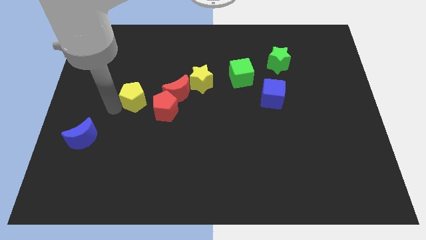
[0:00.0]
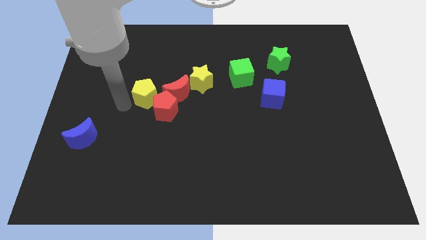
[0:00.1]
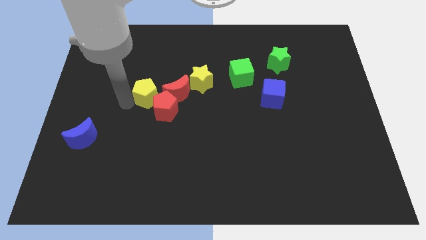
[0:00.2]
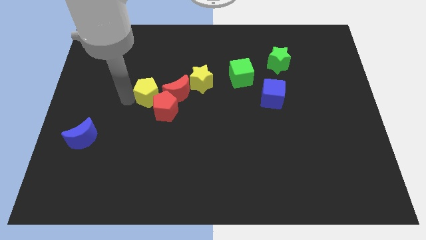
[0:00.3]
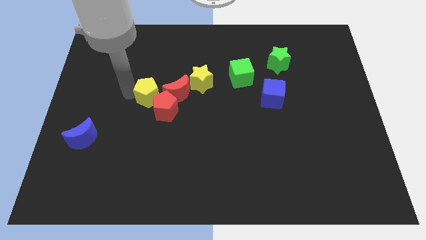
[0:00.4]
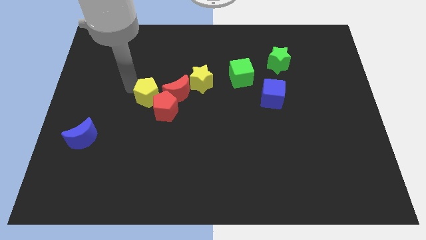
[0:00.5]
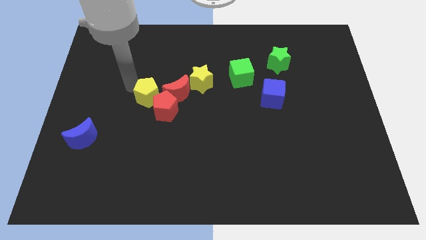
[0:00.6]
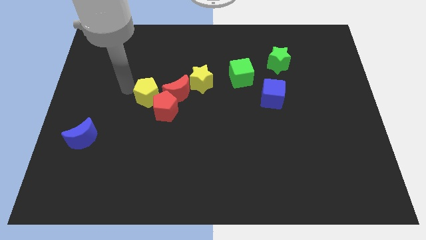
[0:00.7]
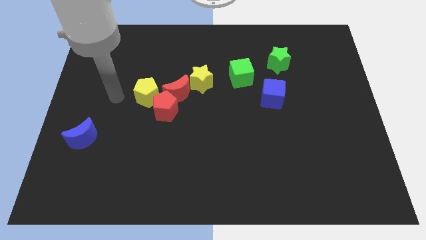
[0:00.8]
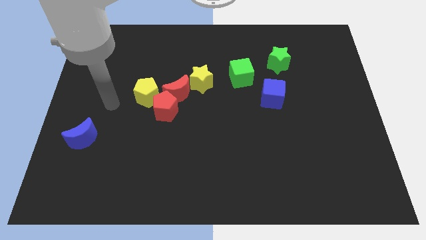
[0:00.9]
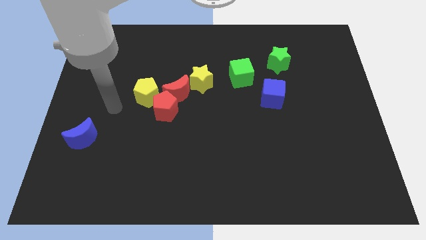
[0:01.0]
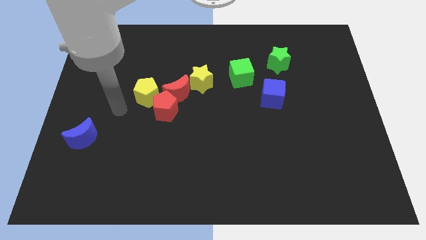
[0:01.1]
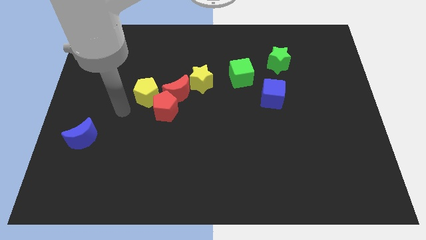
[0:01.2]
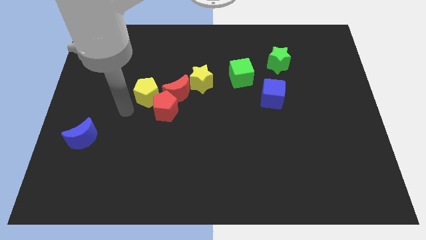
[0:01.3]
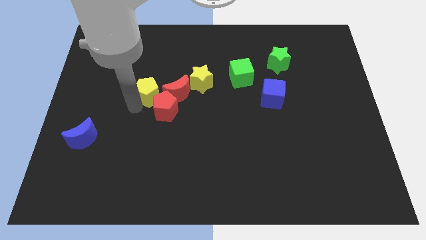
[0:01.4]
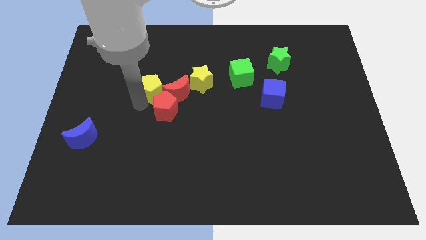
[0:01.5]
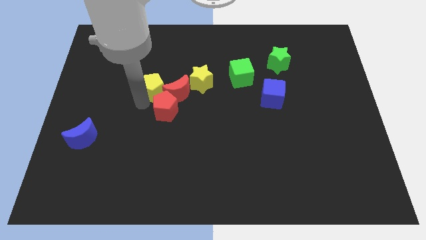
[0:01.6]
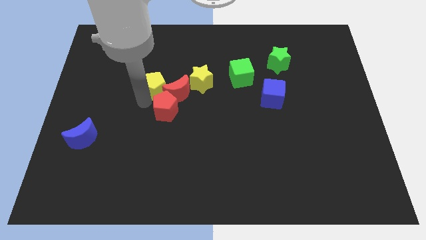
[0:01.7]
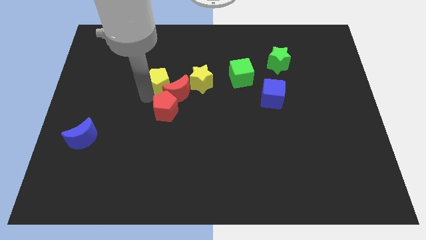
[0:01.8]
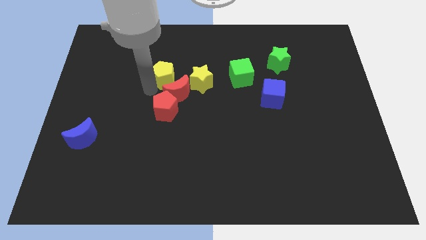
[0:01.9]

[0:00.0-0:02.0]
disturb yellow pentagon

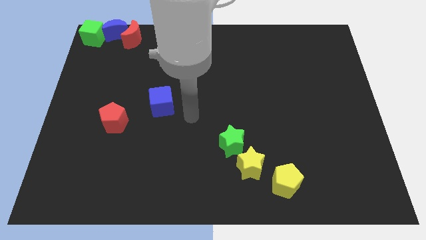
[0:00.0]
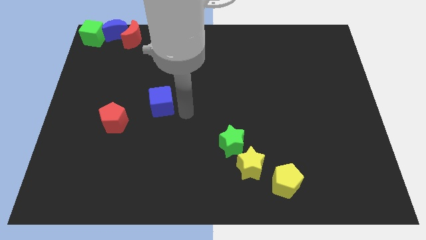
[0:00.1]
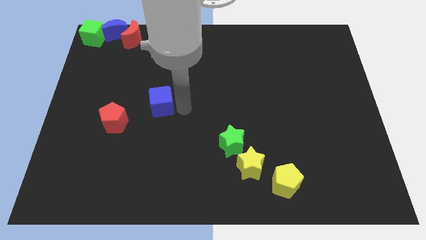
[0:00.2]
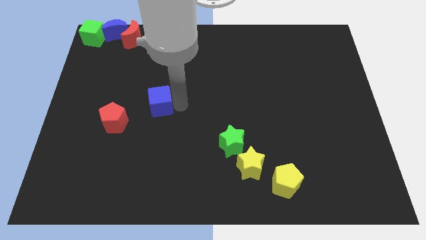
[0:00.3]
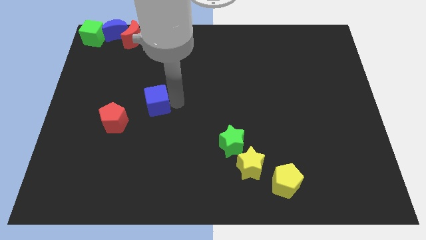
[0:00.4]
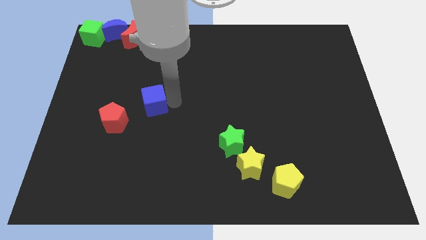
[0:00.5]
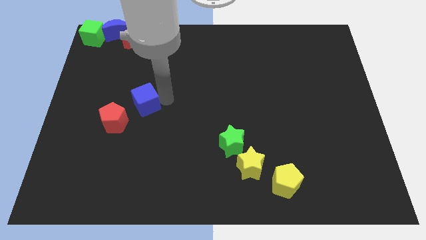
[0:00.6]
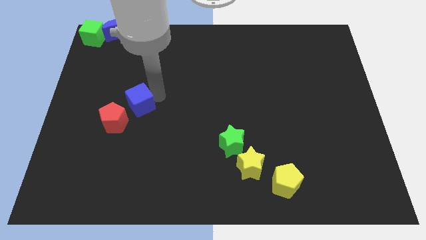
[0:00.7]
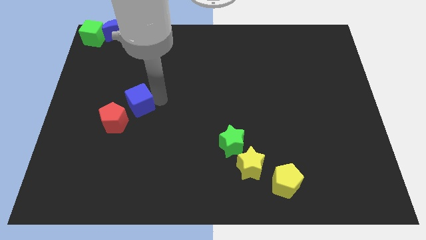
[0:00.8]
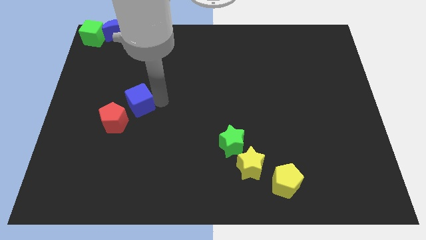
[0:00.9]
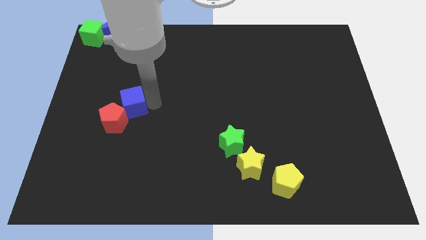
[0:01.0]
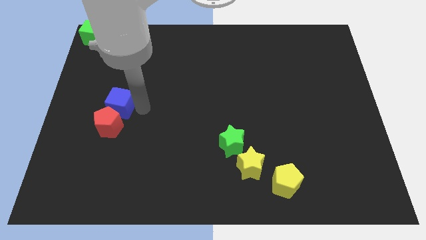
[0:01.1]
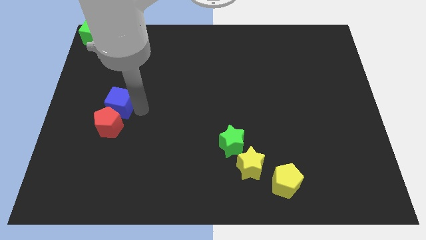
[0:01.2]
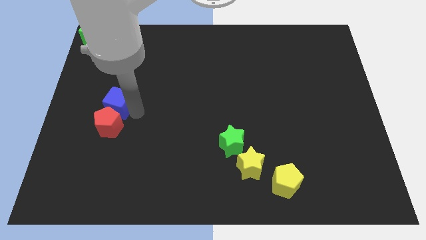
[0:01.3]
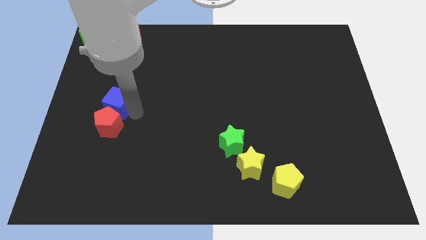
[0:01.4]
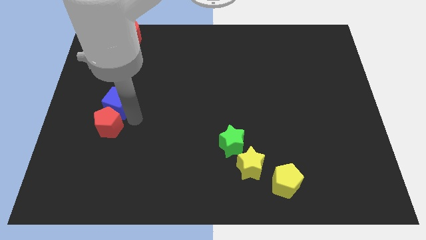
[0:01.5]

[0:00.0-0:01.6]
place the blue cube above the red pentagon

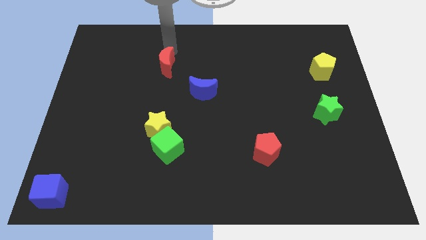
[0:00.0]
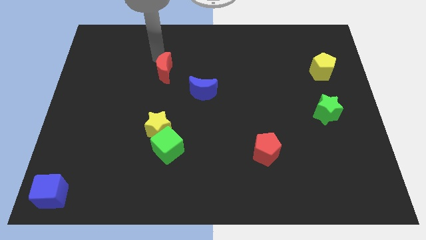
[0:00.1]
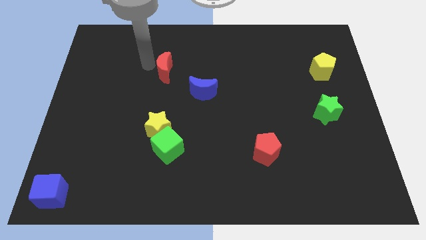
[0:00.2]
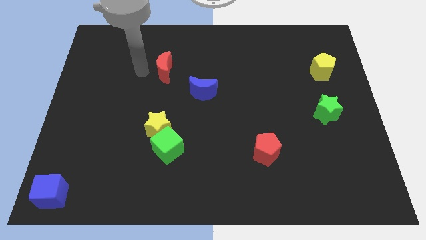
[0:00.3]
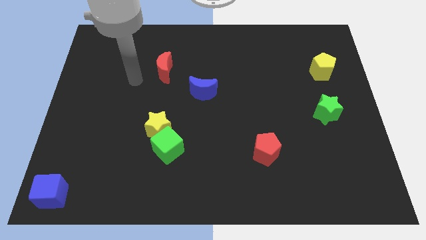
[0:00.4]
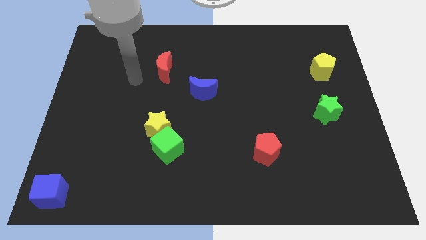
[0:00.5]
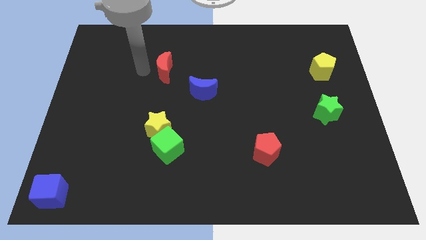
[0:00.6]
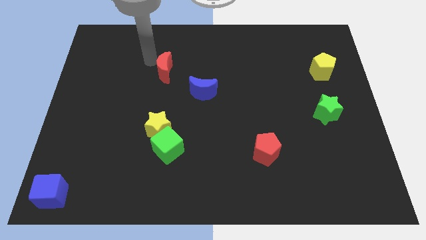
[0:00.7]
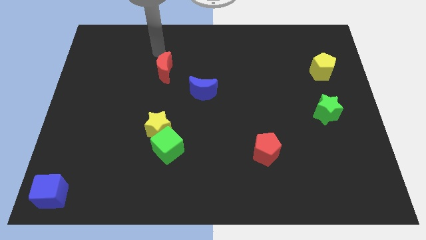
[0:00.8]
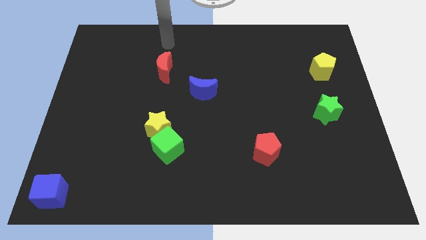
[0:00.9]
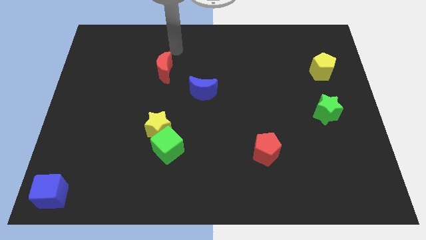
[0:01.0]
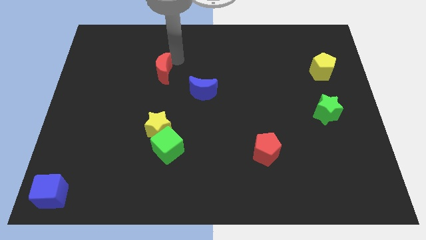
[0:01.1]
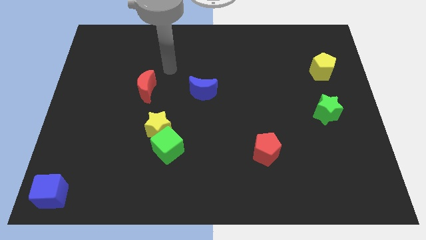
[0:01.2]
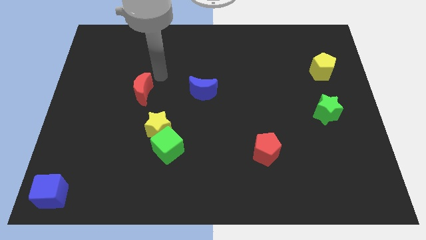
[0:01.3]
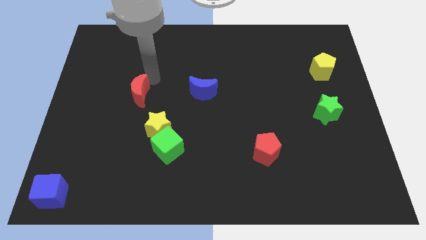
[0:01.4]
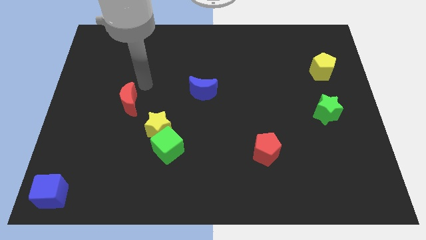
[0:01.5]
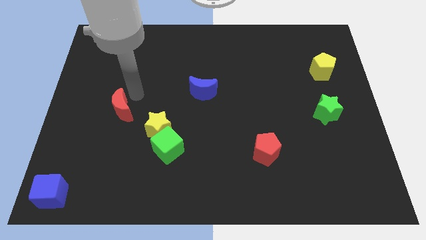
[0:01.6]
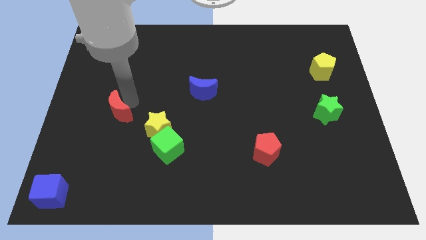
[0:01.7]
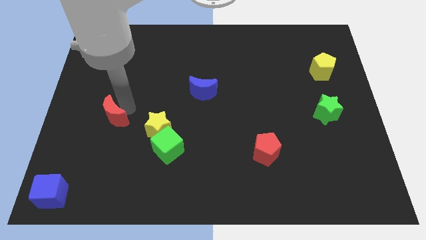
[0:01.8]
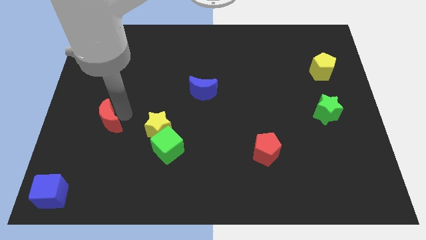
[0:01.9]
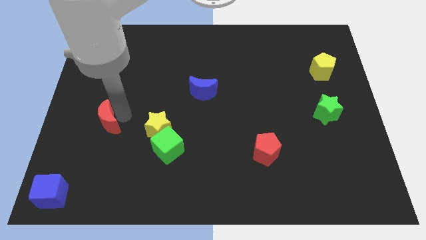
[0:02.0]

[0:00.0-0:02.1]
move the red moon left of the yellow star

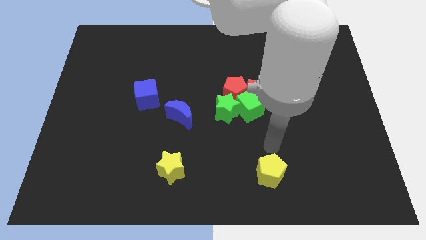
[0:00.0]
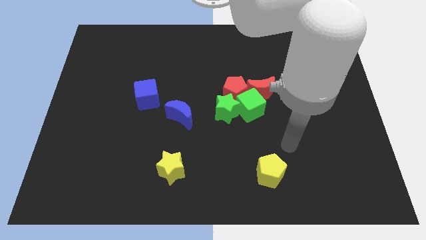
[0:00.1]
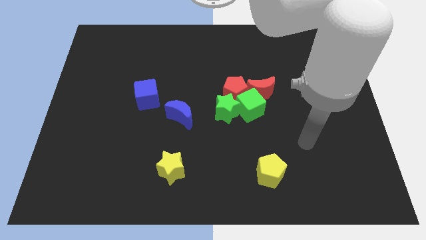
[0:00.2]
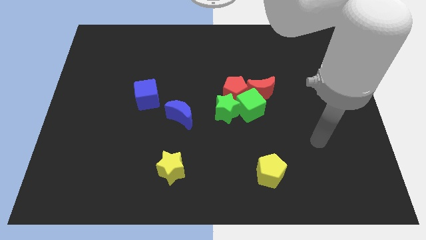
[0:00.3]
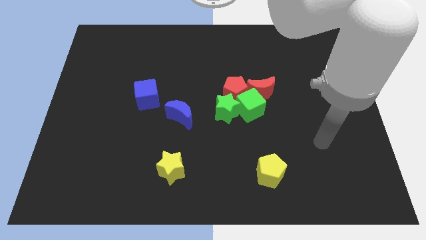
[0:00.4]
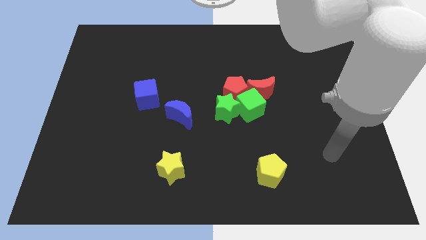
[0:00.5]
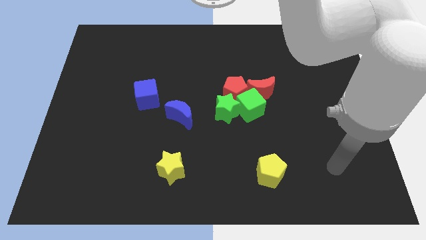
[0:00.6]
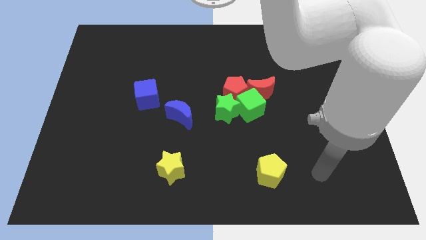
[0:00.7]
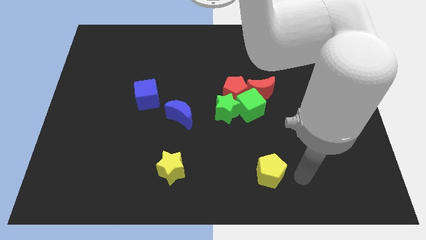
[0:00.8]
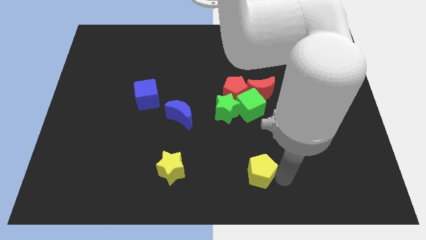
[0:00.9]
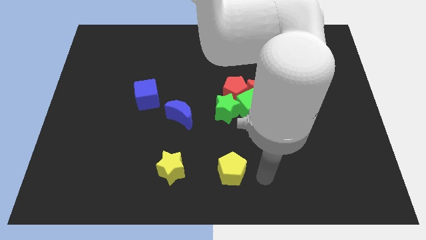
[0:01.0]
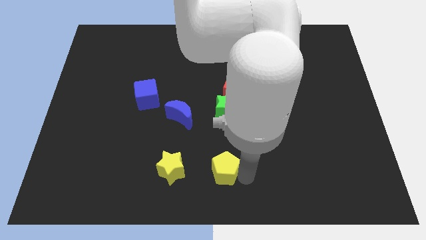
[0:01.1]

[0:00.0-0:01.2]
push yellow pentagon below green star

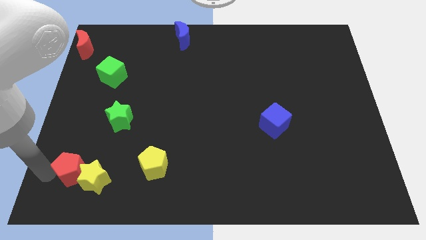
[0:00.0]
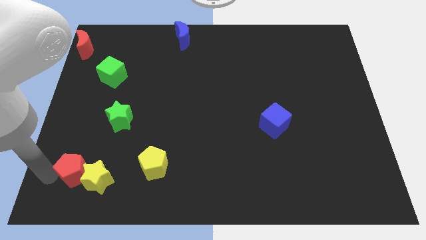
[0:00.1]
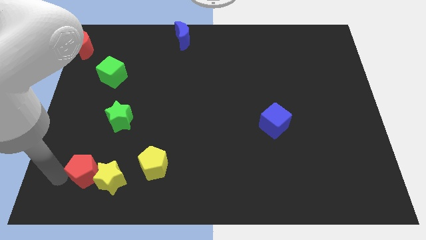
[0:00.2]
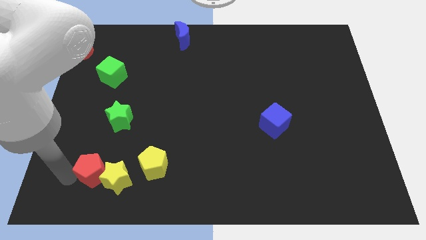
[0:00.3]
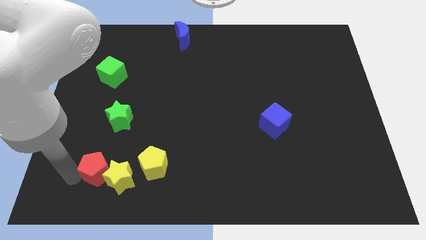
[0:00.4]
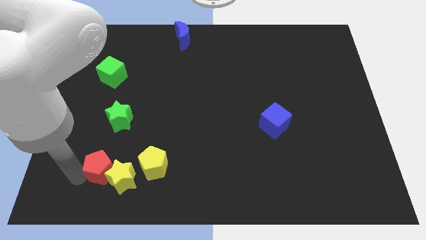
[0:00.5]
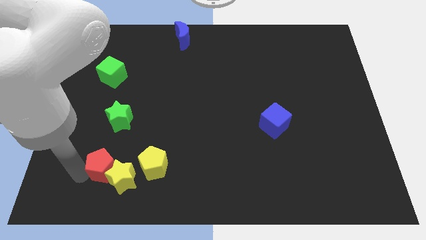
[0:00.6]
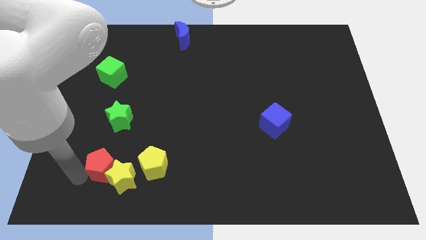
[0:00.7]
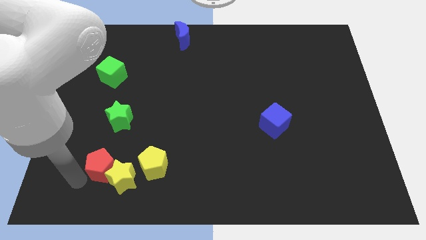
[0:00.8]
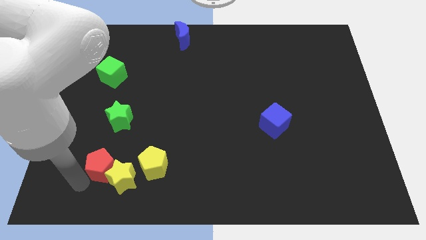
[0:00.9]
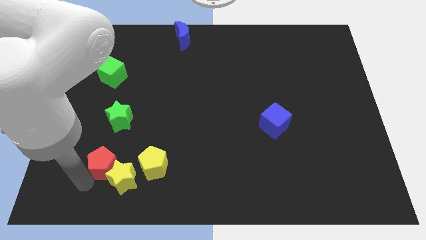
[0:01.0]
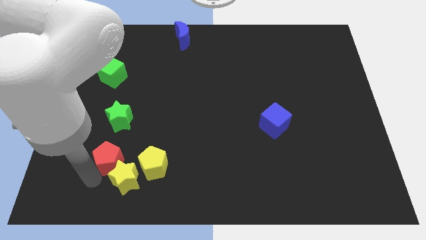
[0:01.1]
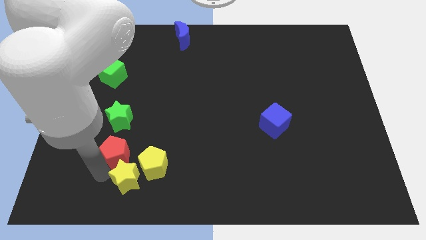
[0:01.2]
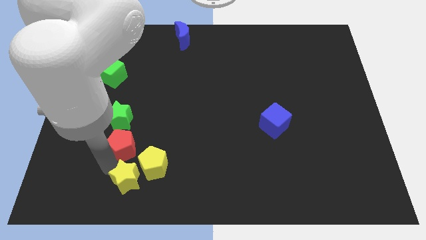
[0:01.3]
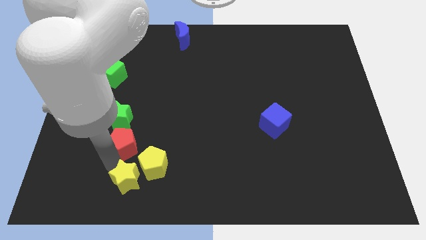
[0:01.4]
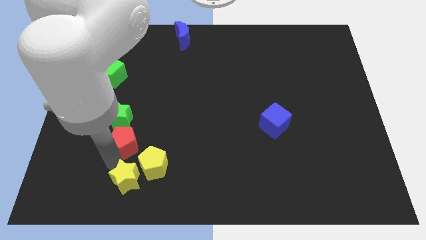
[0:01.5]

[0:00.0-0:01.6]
separate the red pentagon from the yellow star

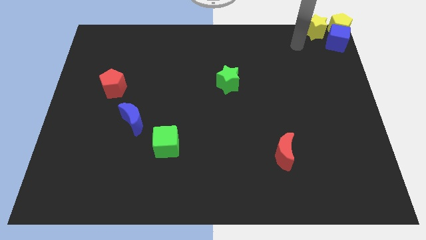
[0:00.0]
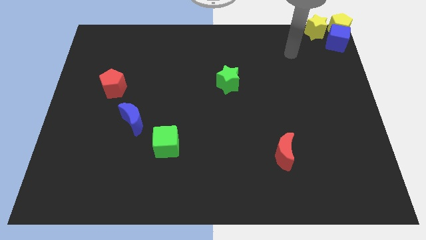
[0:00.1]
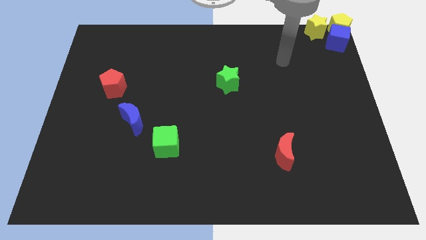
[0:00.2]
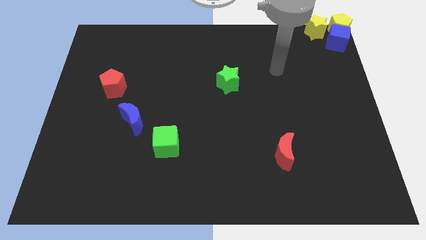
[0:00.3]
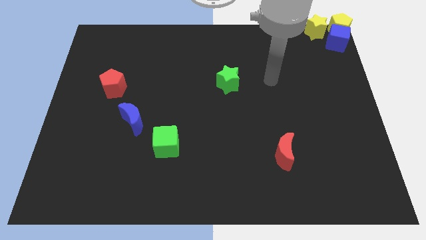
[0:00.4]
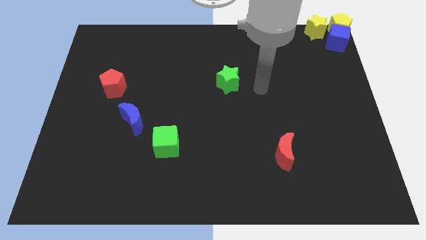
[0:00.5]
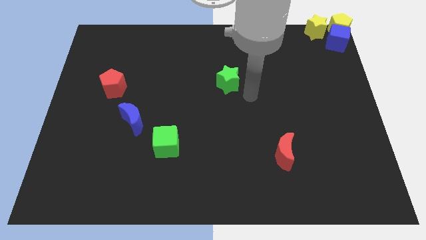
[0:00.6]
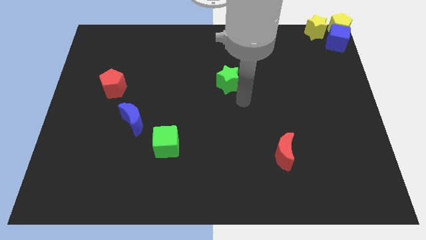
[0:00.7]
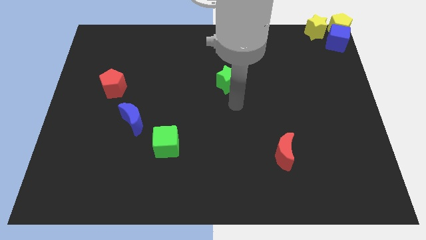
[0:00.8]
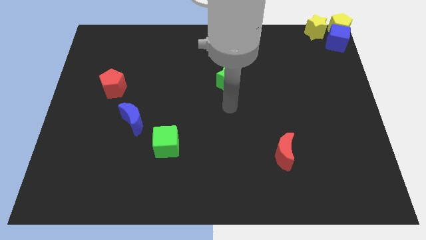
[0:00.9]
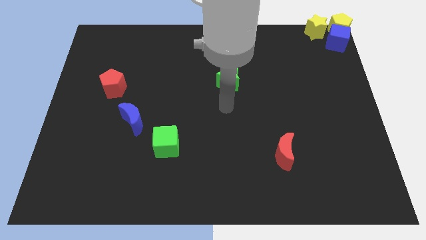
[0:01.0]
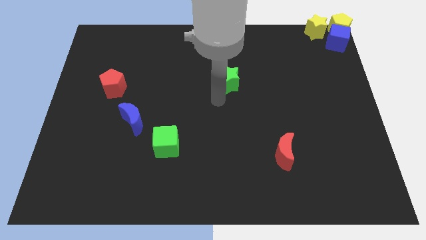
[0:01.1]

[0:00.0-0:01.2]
go away from the yellow star
